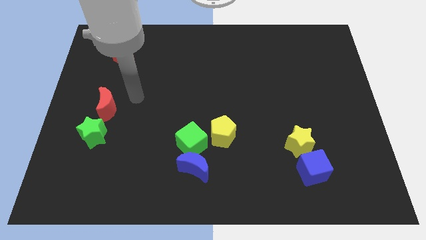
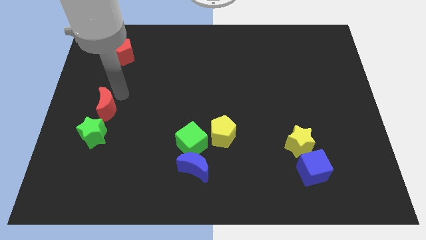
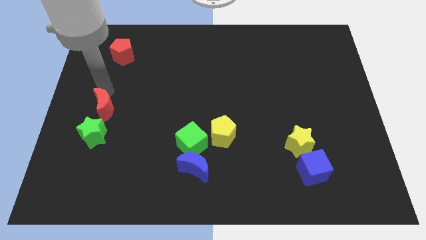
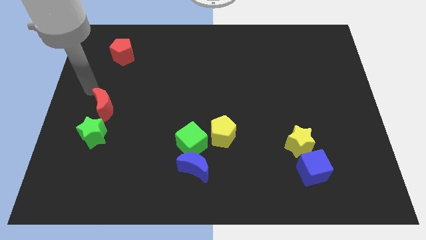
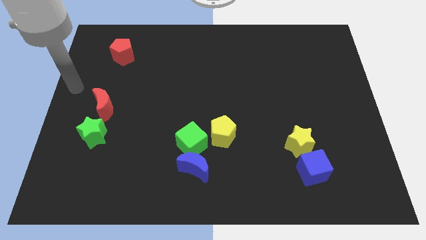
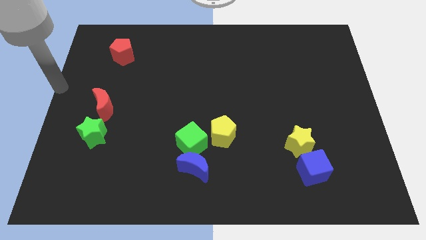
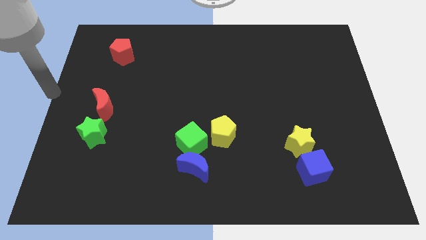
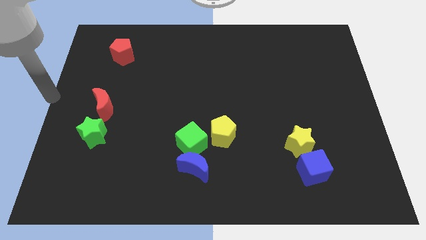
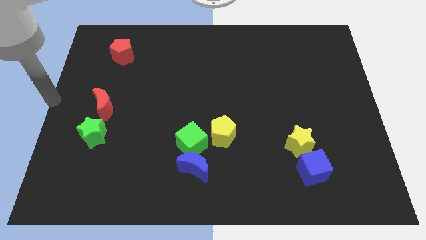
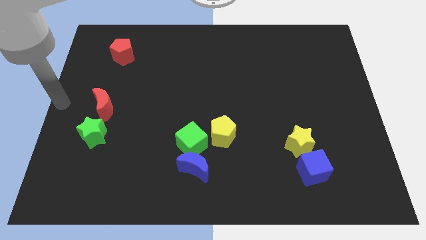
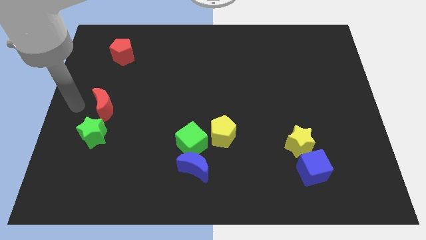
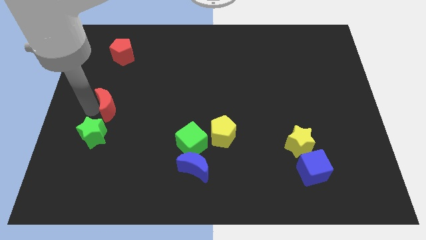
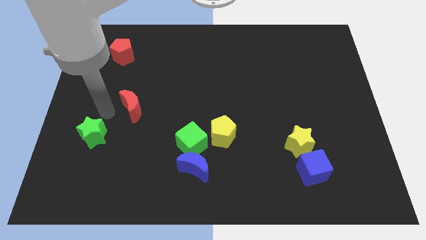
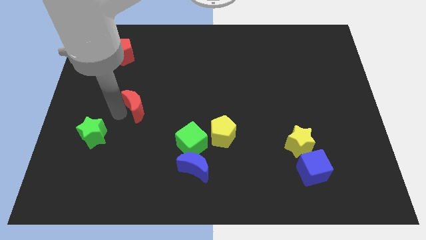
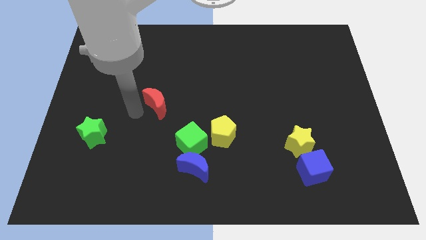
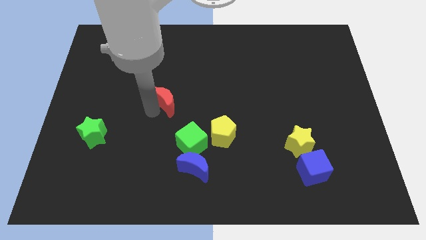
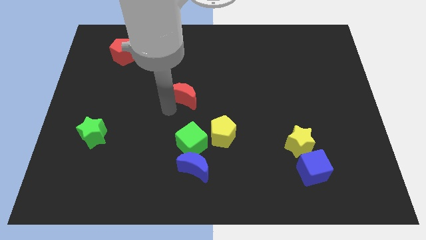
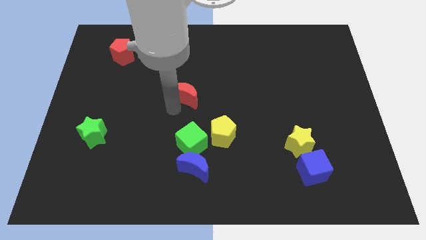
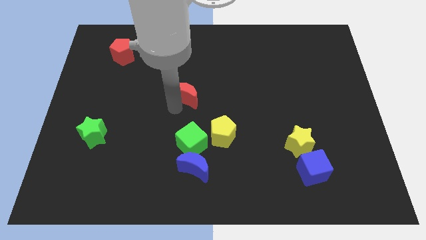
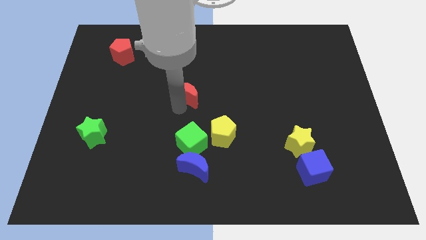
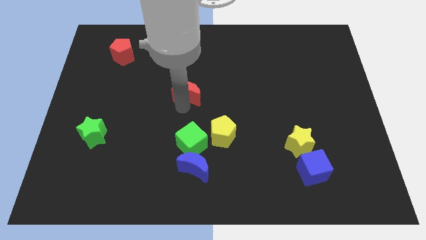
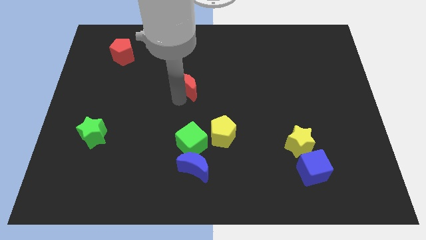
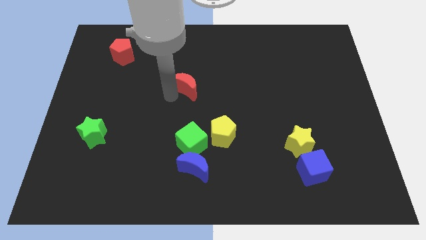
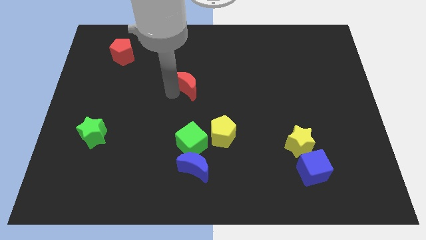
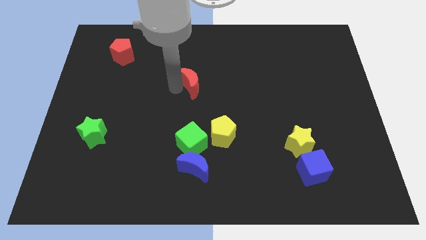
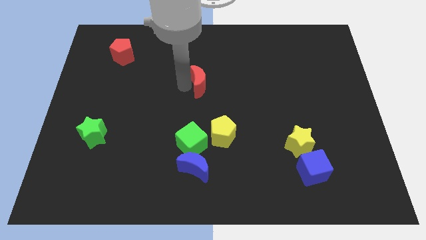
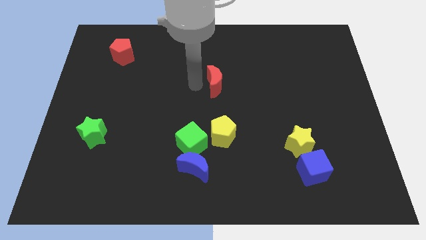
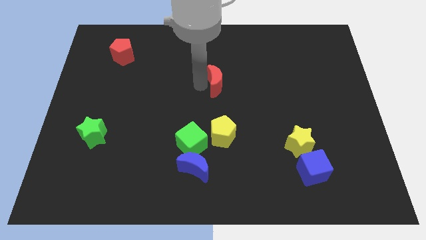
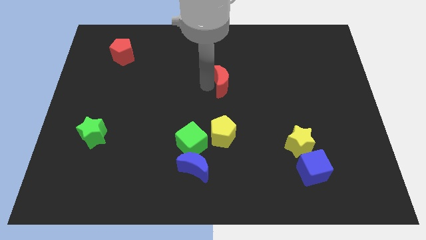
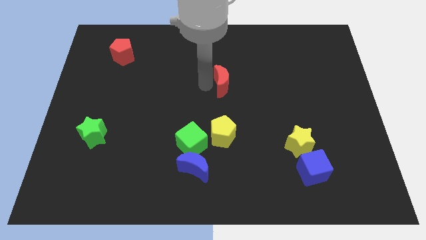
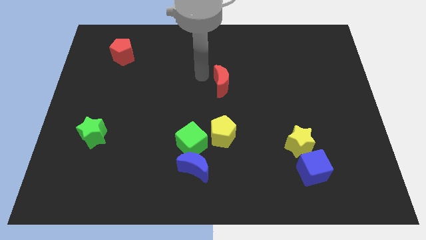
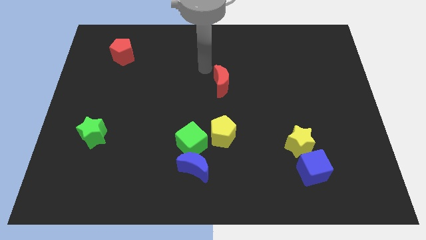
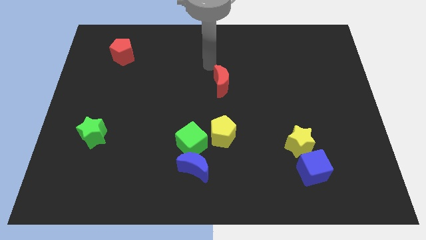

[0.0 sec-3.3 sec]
move the red crescent on top of yellow pentagon

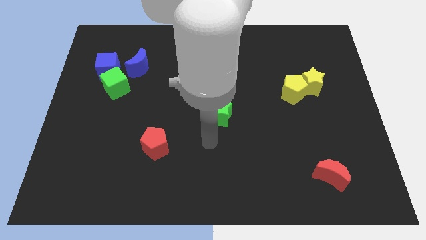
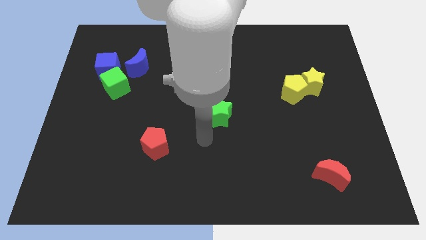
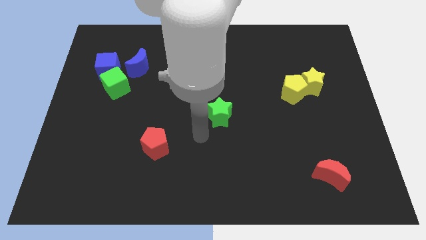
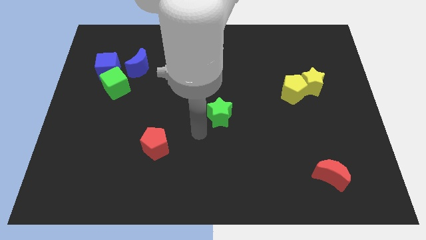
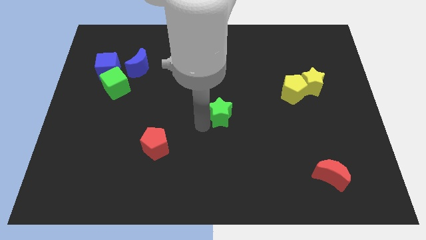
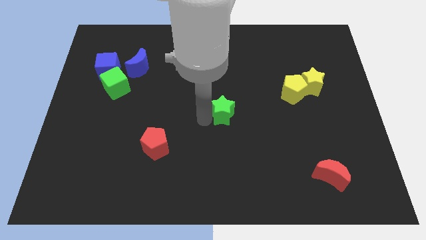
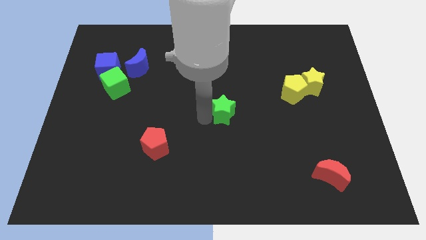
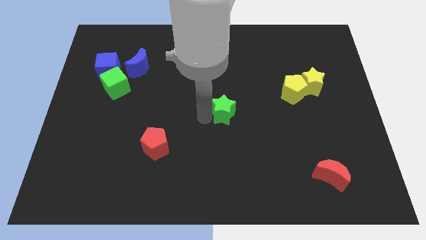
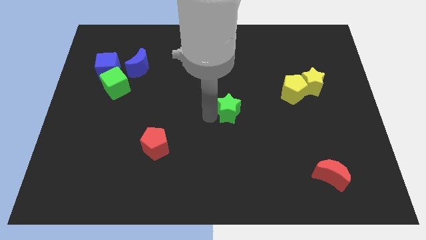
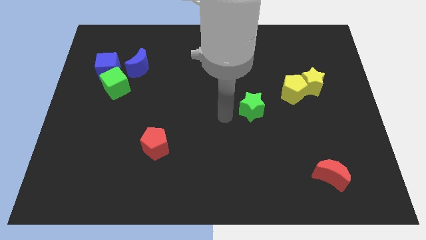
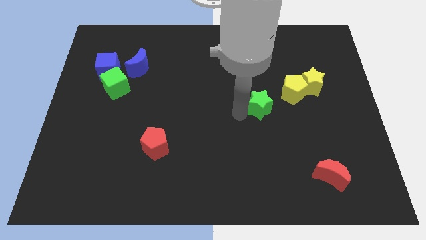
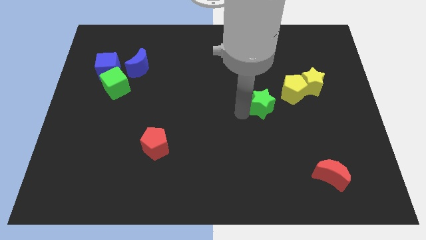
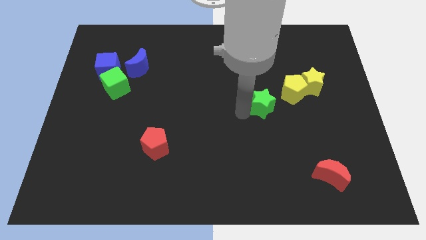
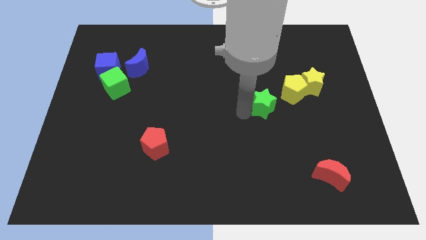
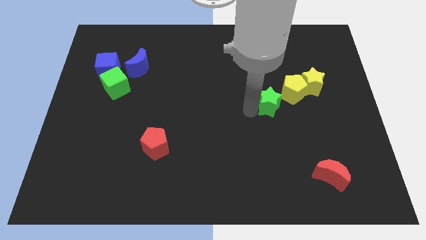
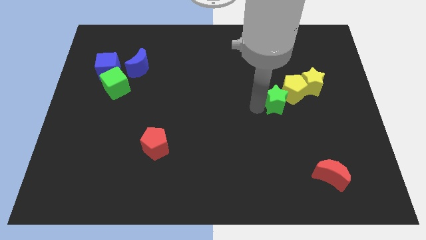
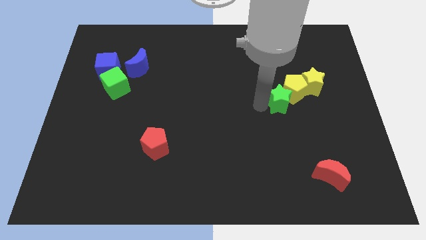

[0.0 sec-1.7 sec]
push the green star into the yellow pentagon from the left

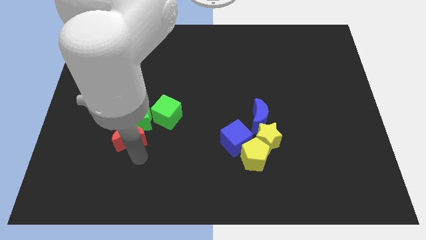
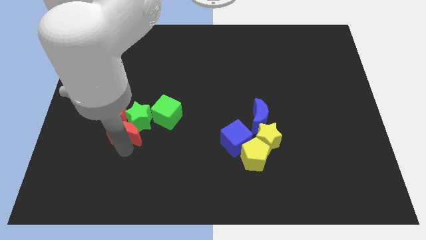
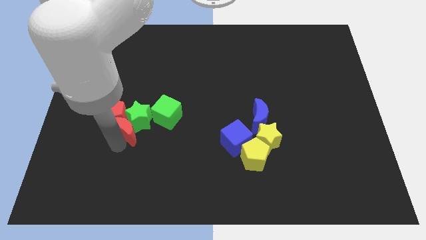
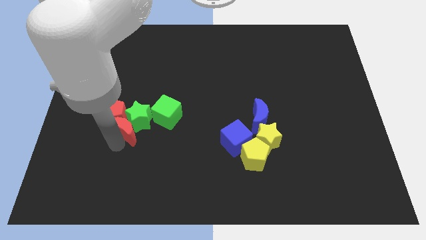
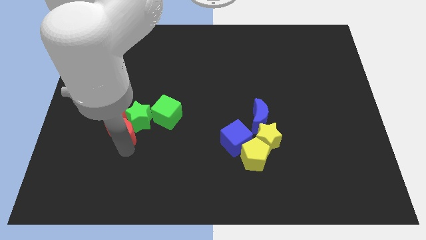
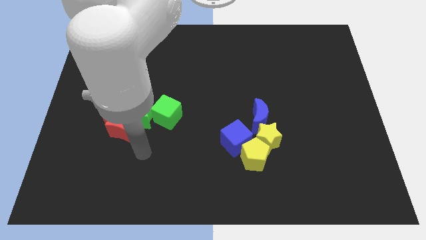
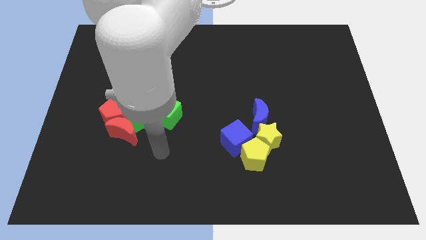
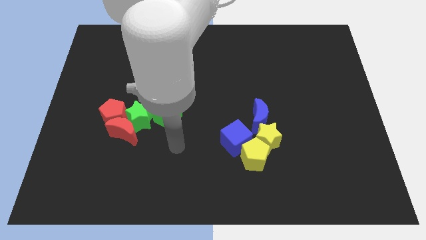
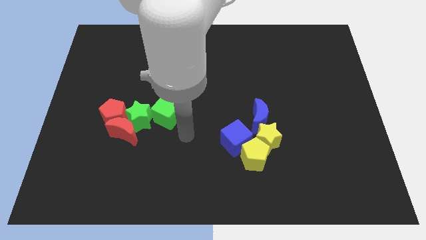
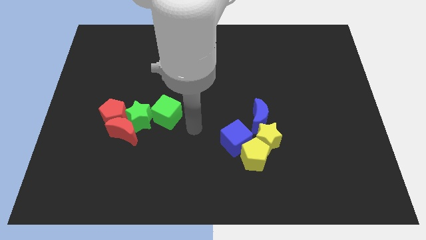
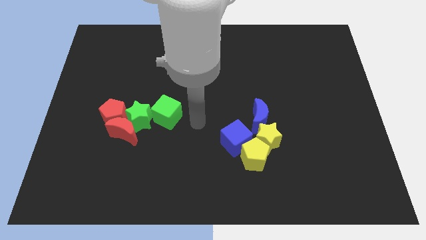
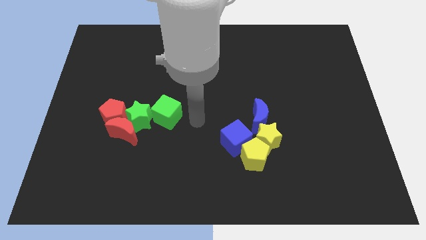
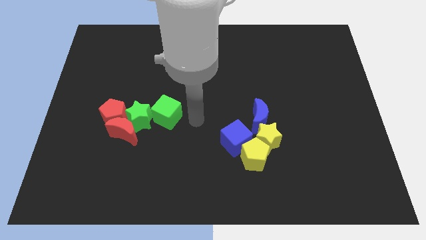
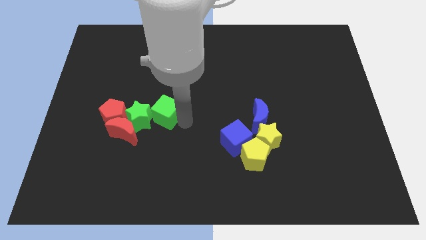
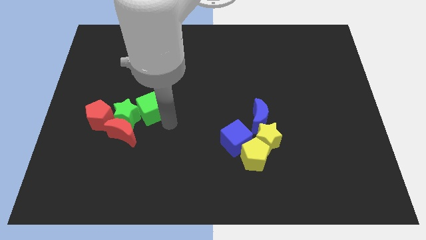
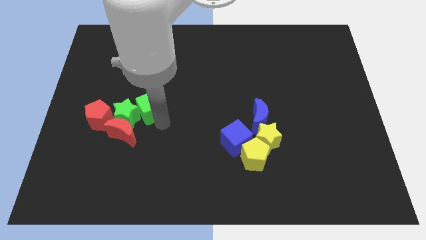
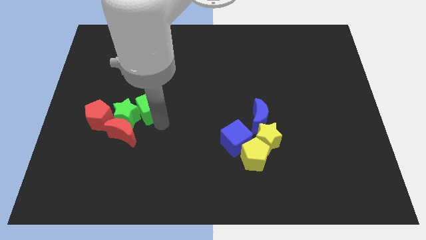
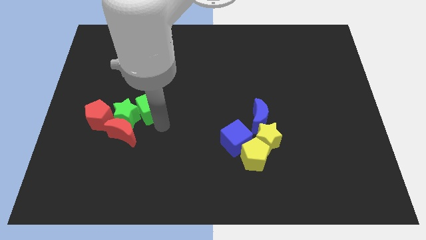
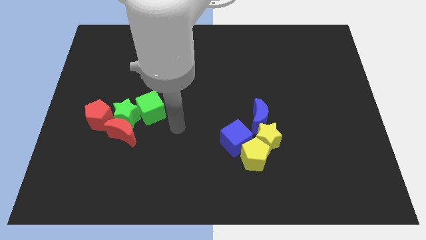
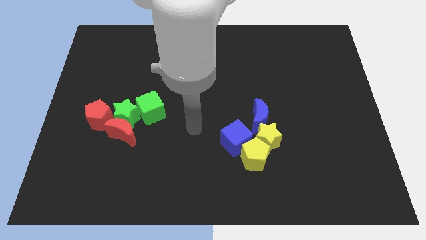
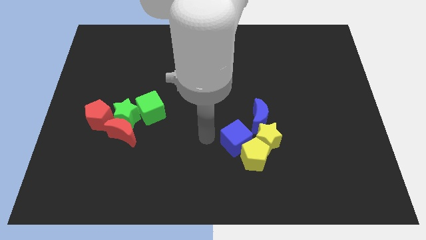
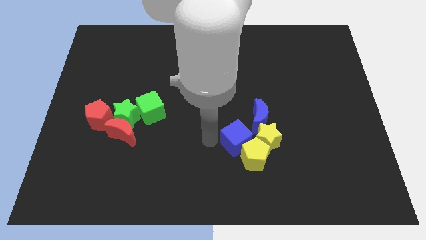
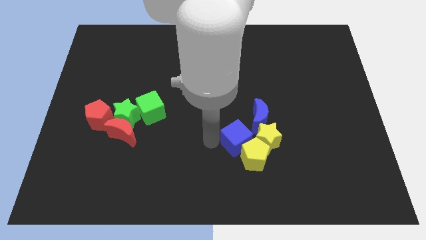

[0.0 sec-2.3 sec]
point your arm at the left of the blue cube

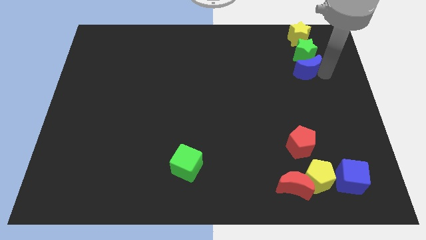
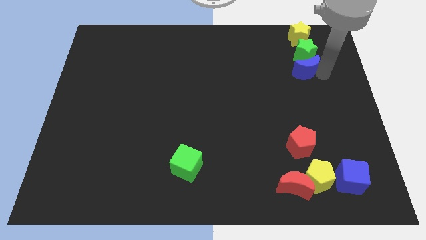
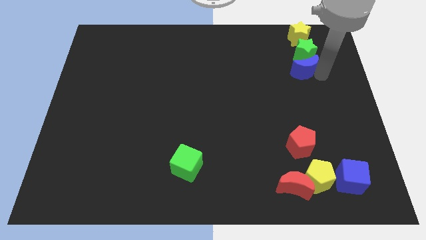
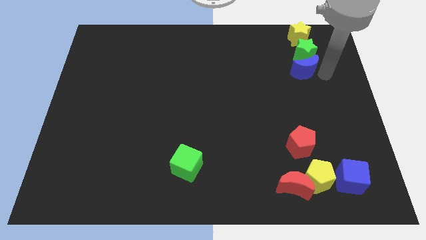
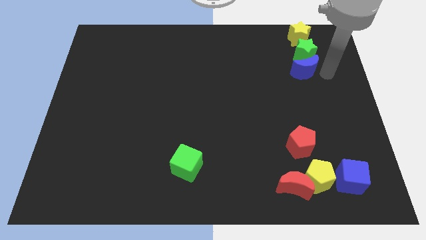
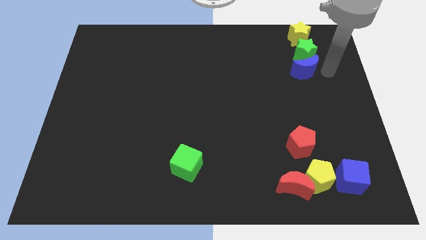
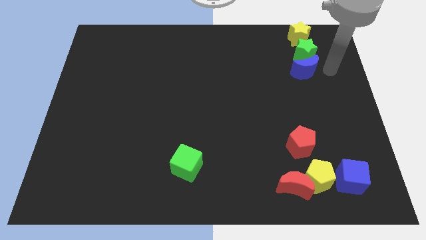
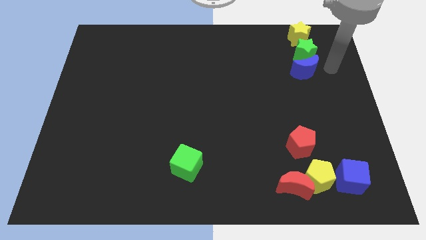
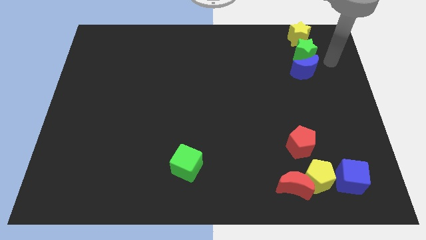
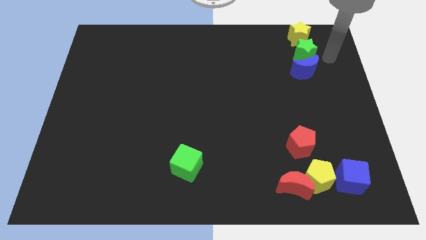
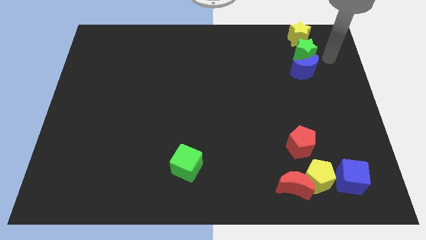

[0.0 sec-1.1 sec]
push blue crescent slightly upwards

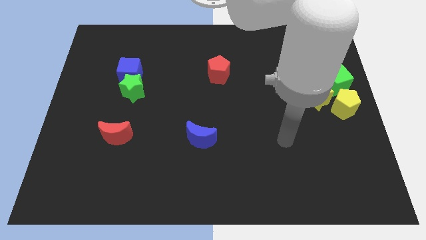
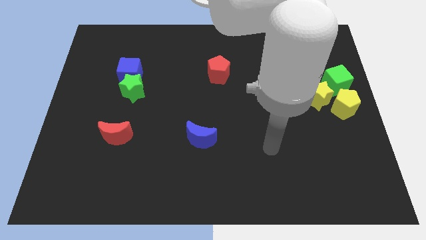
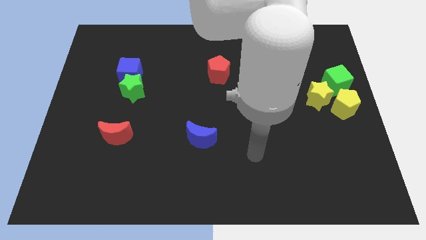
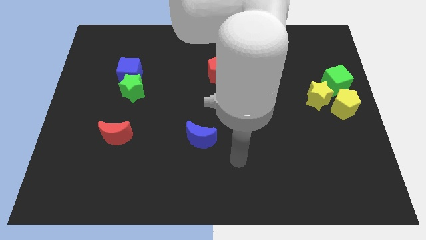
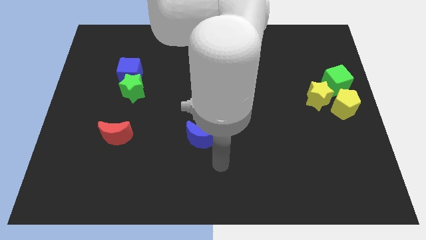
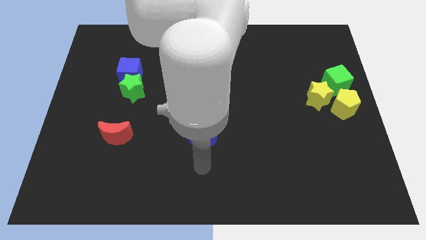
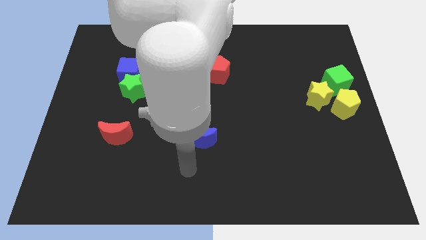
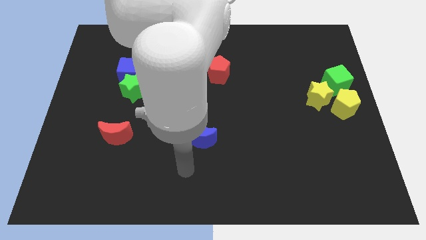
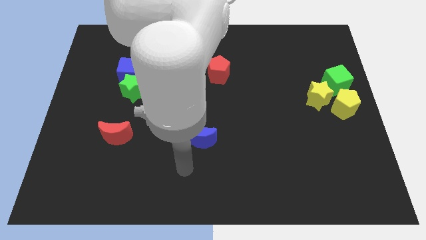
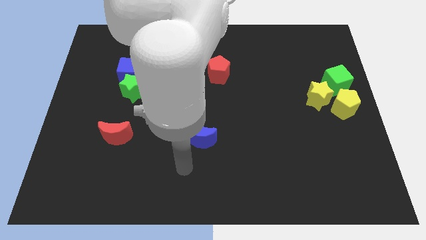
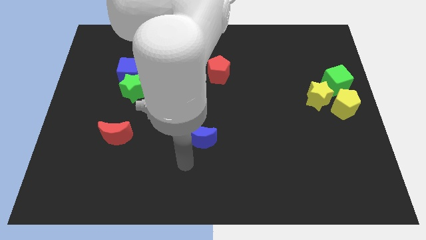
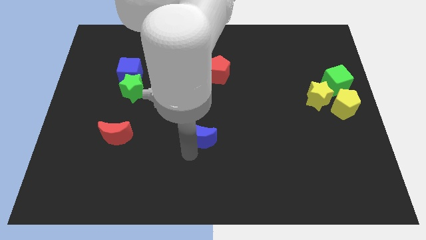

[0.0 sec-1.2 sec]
point the arm below the blue moon
